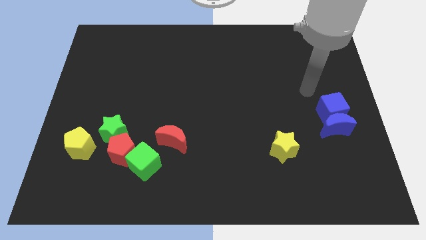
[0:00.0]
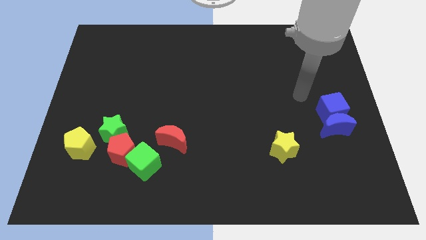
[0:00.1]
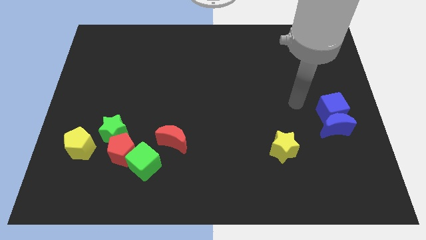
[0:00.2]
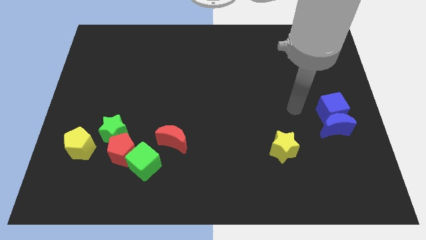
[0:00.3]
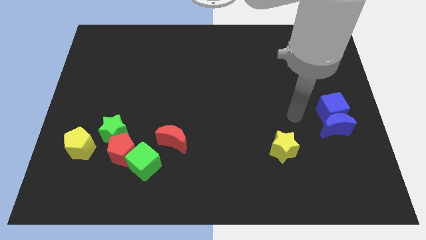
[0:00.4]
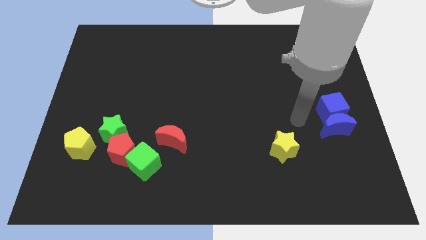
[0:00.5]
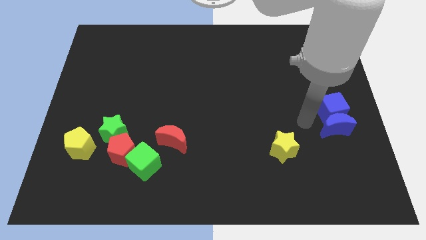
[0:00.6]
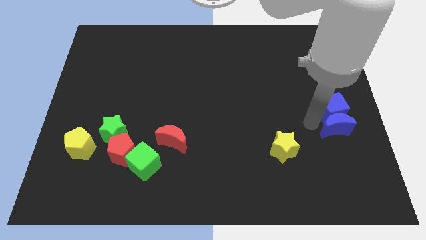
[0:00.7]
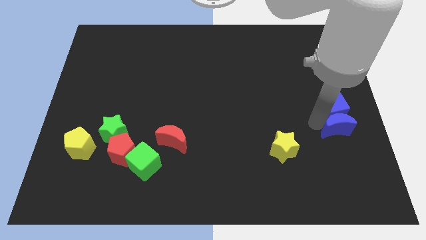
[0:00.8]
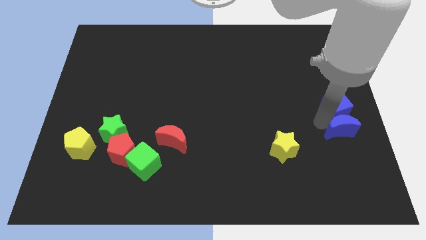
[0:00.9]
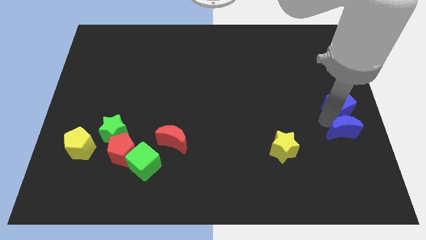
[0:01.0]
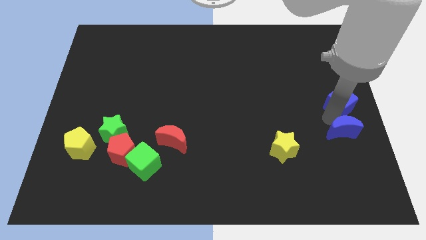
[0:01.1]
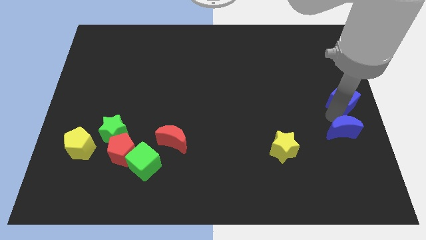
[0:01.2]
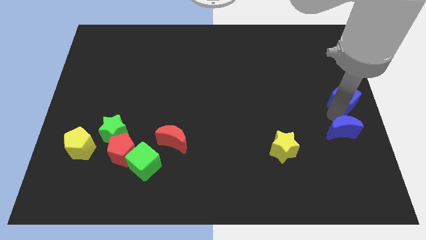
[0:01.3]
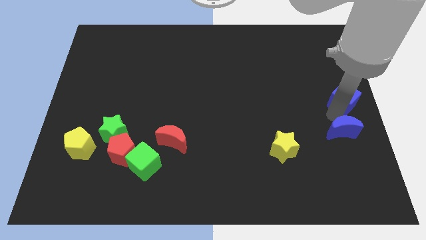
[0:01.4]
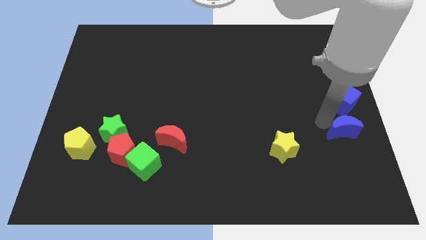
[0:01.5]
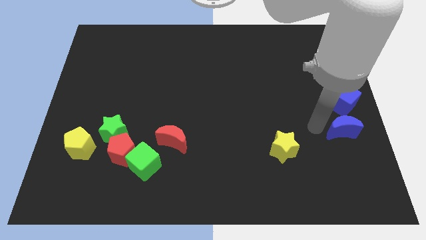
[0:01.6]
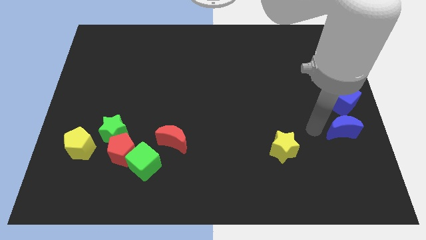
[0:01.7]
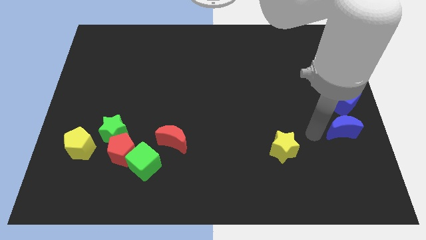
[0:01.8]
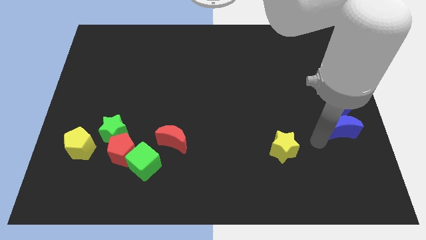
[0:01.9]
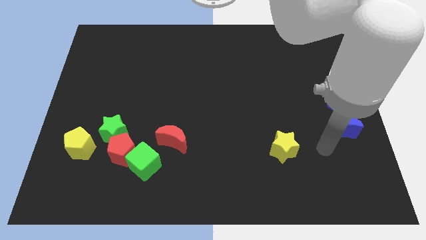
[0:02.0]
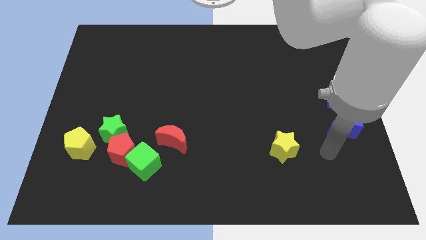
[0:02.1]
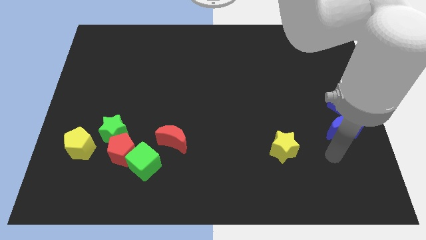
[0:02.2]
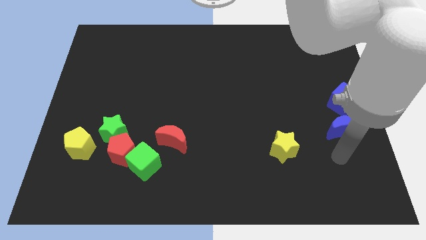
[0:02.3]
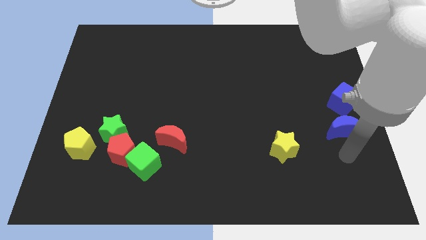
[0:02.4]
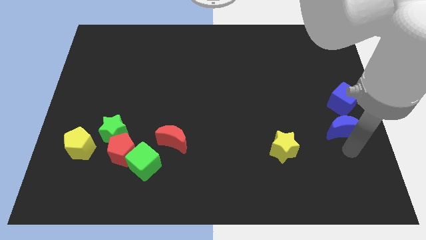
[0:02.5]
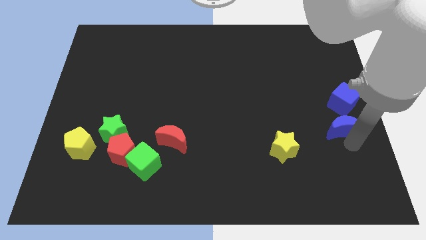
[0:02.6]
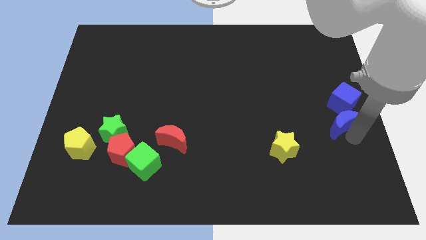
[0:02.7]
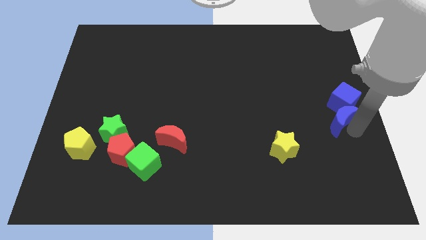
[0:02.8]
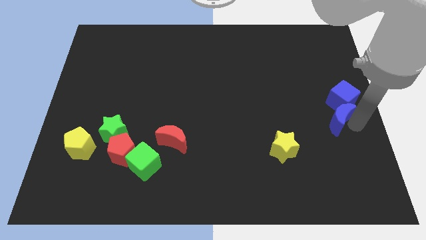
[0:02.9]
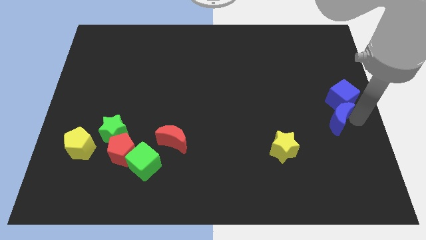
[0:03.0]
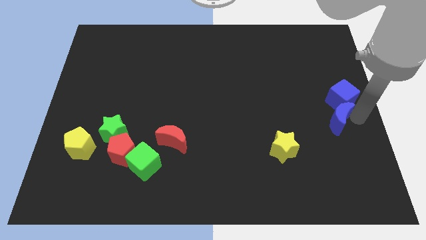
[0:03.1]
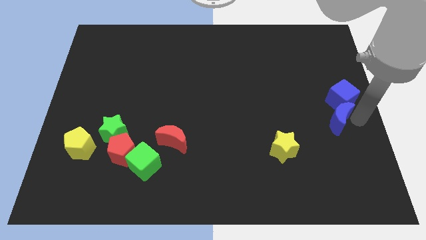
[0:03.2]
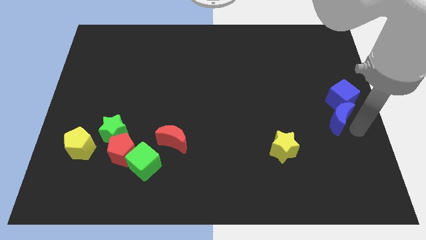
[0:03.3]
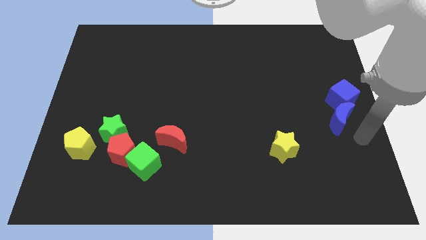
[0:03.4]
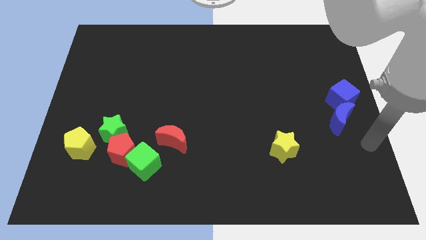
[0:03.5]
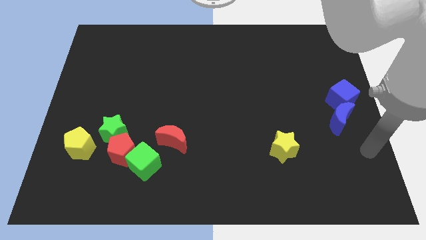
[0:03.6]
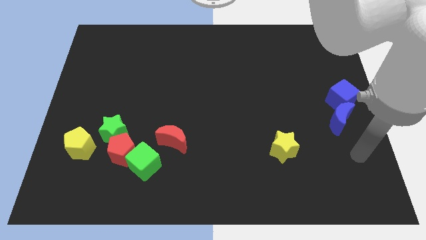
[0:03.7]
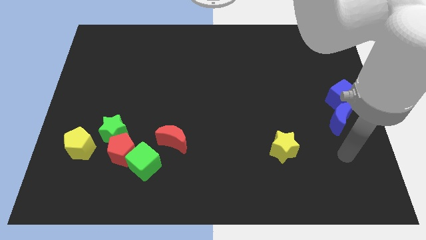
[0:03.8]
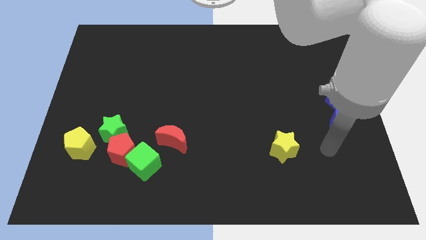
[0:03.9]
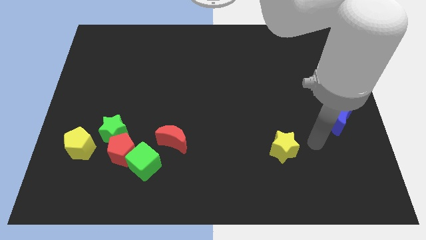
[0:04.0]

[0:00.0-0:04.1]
adjust blue blocks towards center right

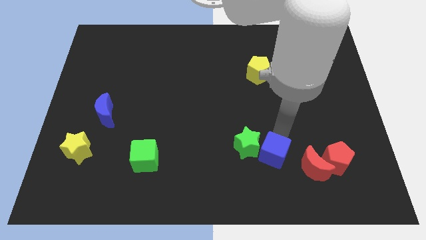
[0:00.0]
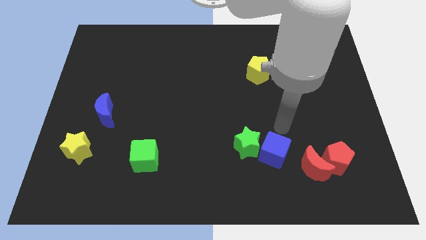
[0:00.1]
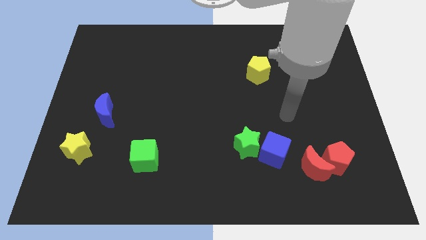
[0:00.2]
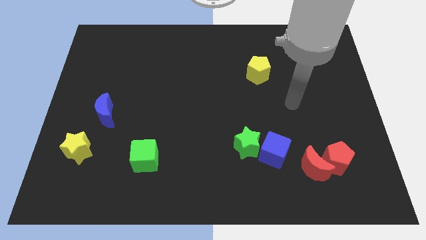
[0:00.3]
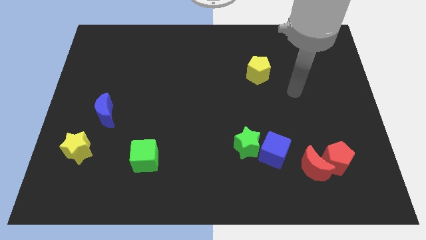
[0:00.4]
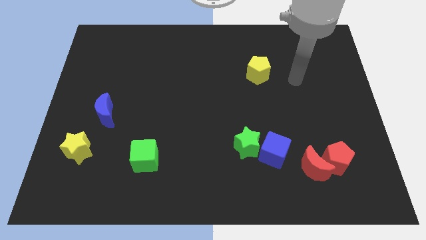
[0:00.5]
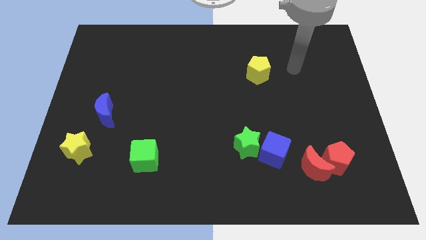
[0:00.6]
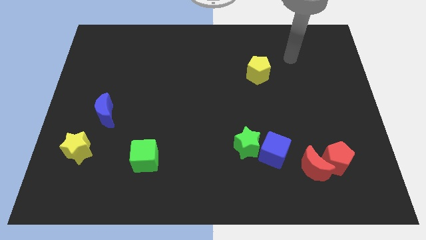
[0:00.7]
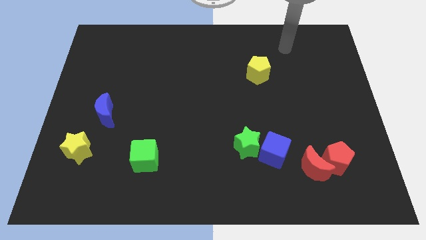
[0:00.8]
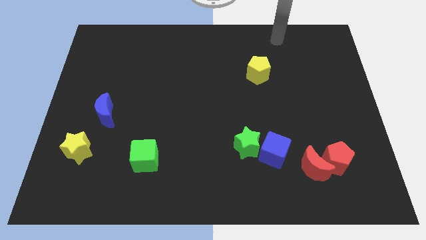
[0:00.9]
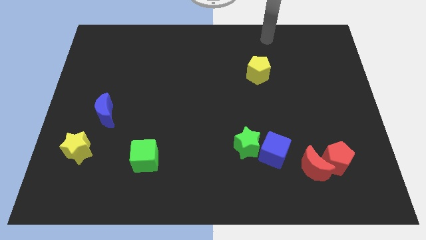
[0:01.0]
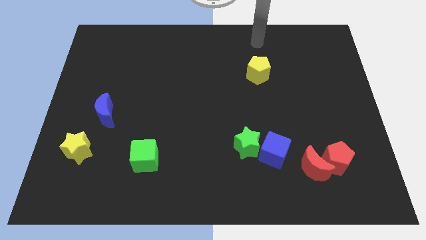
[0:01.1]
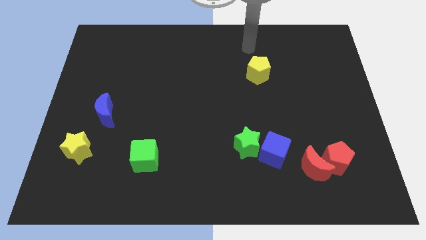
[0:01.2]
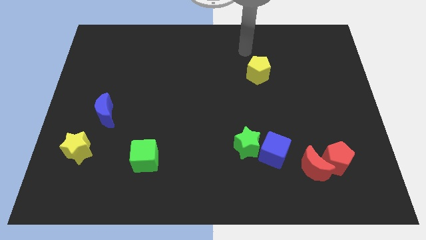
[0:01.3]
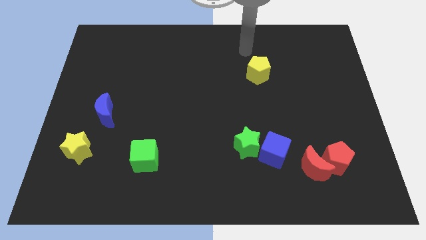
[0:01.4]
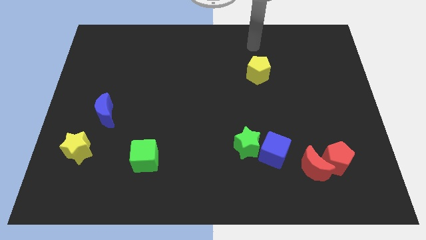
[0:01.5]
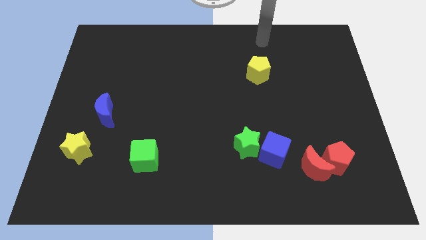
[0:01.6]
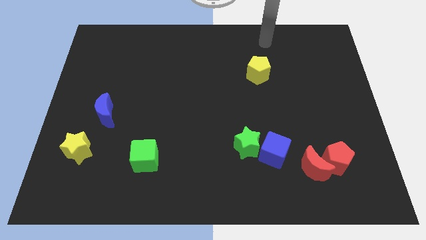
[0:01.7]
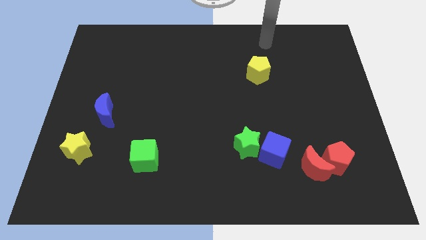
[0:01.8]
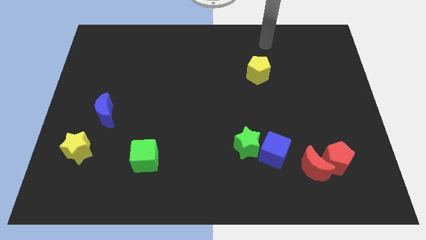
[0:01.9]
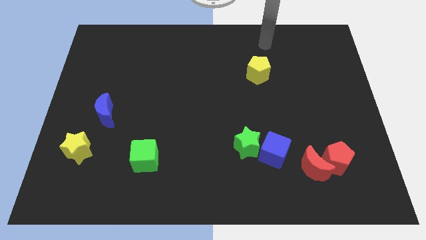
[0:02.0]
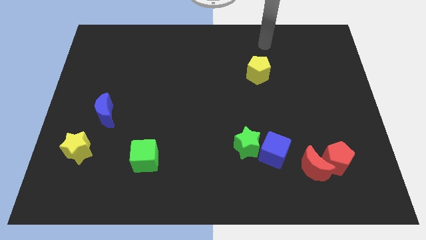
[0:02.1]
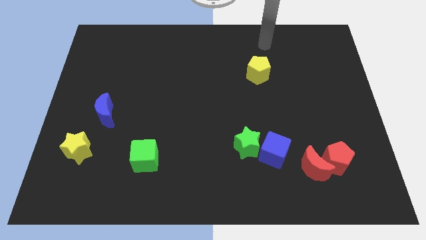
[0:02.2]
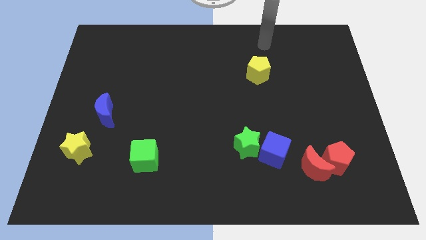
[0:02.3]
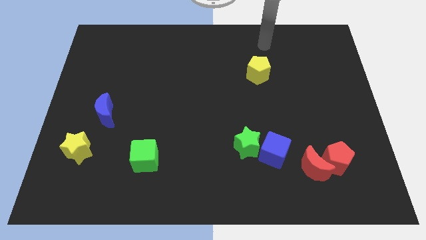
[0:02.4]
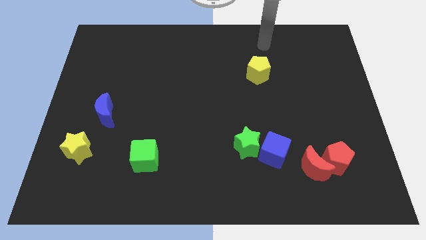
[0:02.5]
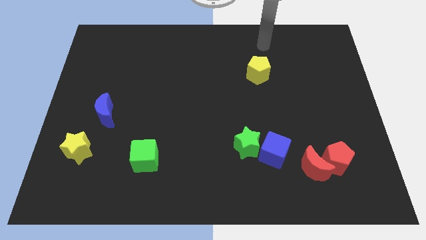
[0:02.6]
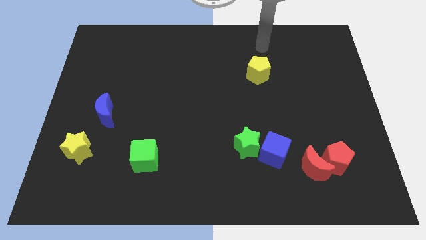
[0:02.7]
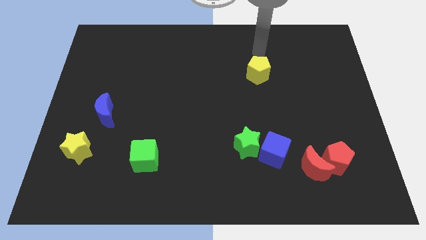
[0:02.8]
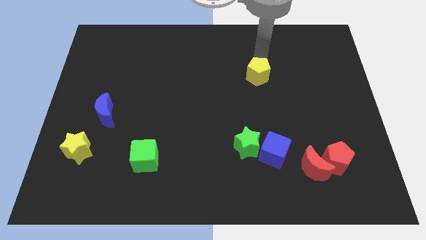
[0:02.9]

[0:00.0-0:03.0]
move your arm towards the top yellow pentagon

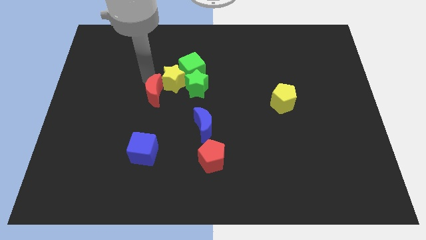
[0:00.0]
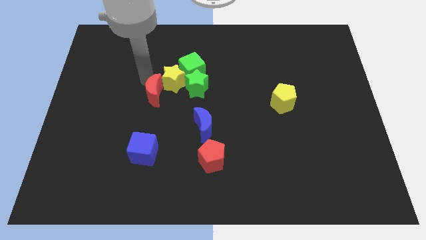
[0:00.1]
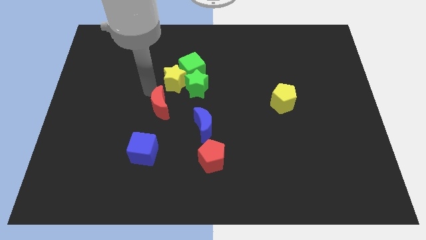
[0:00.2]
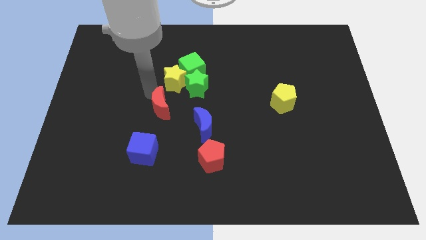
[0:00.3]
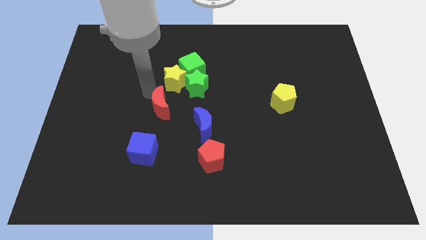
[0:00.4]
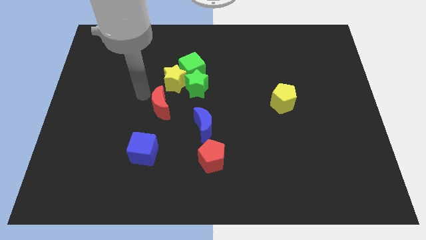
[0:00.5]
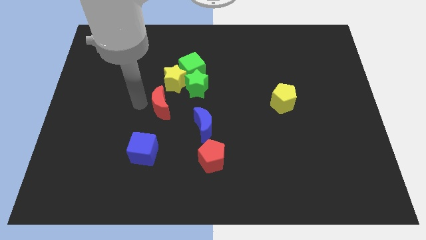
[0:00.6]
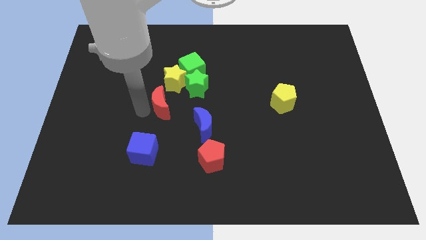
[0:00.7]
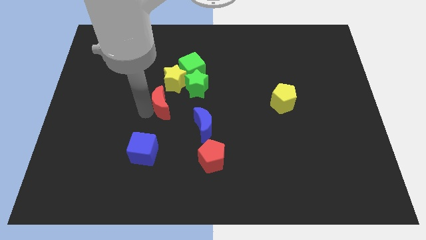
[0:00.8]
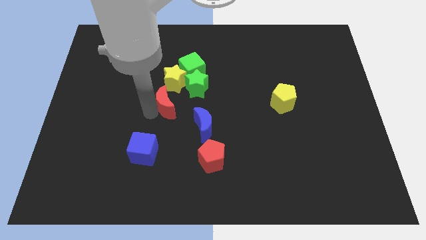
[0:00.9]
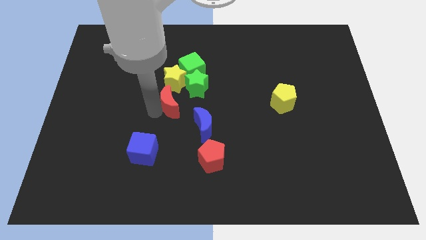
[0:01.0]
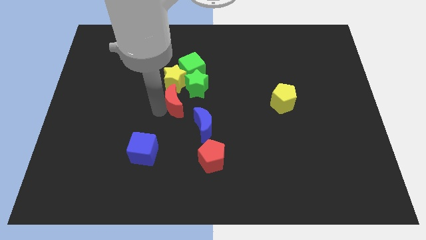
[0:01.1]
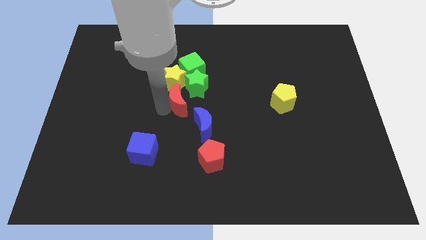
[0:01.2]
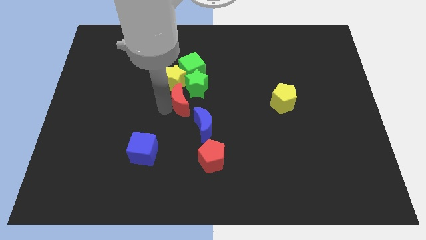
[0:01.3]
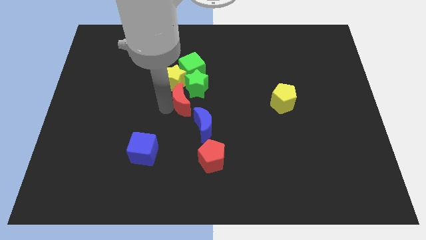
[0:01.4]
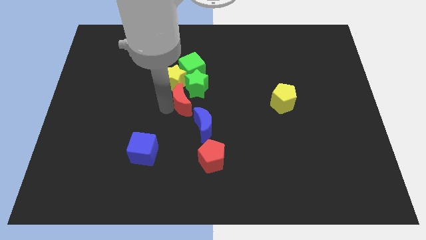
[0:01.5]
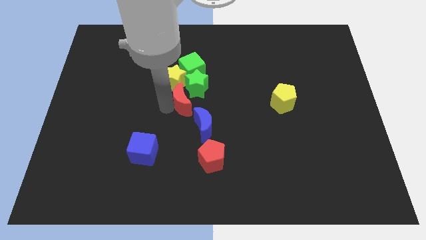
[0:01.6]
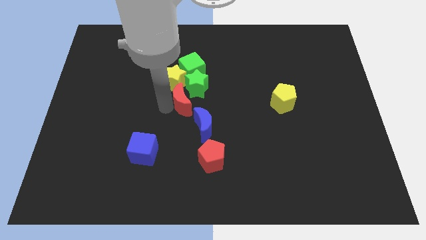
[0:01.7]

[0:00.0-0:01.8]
push the red moon in between the yellow star and blue moon

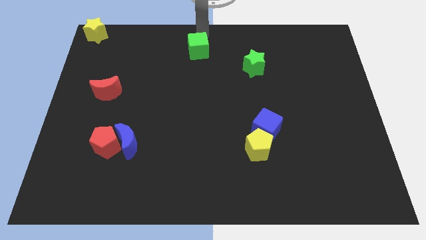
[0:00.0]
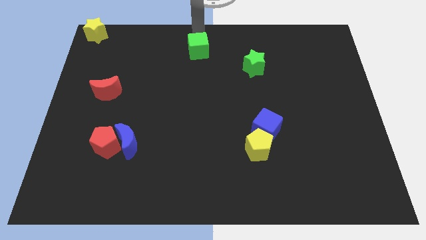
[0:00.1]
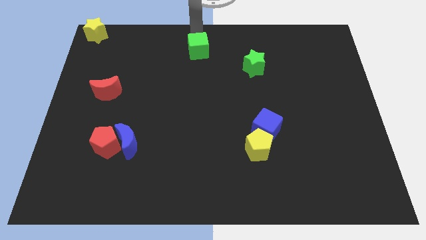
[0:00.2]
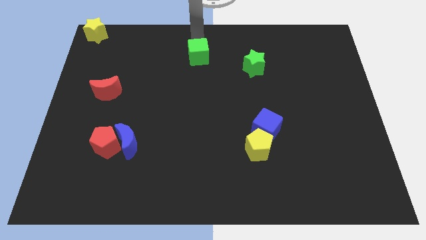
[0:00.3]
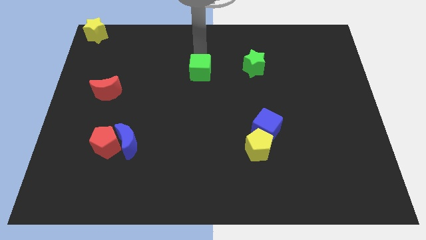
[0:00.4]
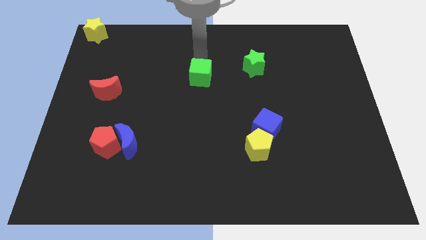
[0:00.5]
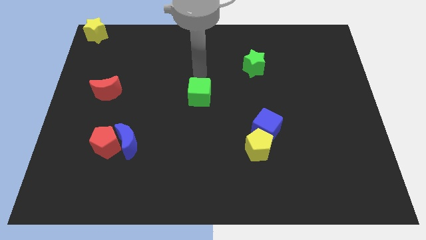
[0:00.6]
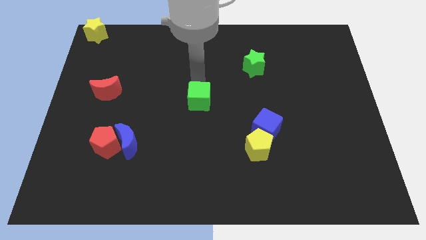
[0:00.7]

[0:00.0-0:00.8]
place the green cube at the center of the board
